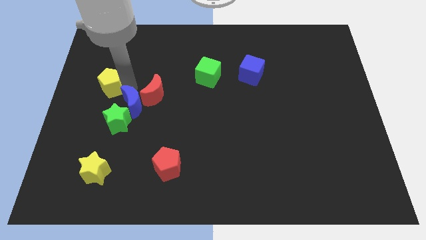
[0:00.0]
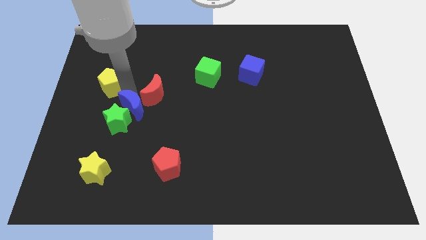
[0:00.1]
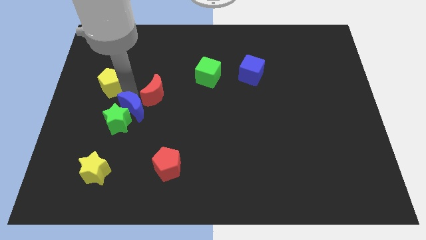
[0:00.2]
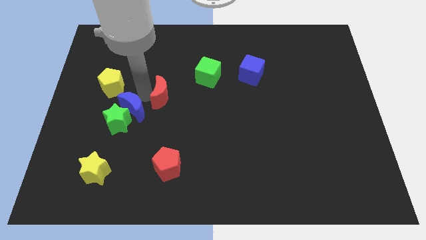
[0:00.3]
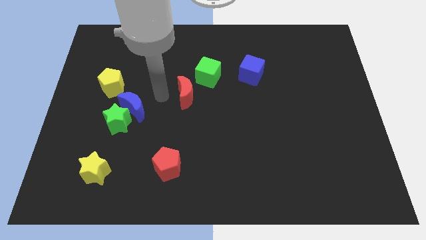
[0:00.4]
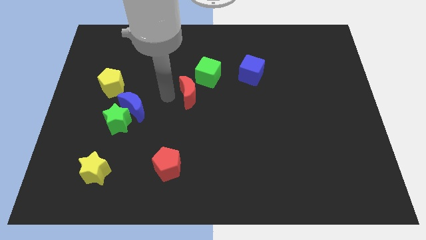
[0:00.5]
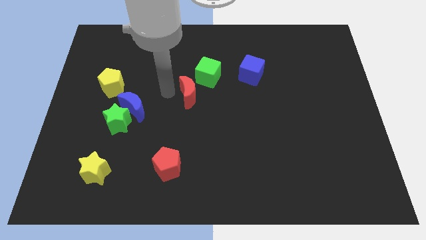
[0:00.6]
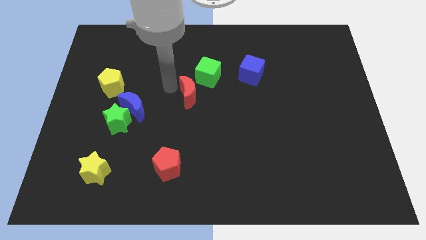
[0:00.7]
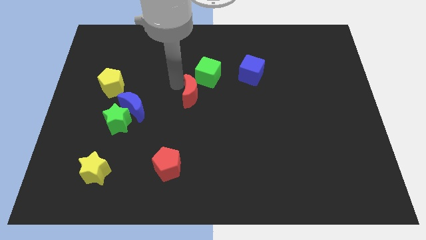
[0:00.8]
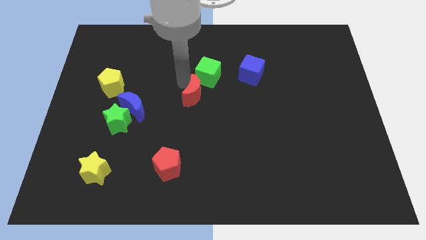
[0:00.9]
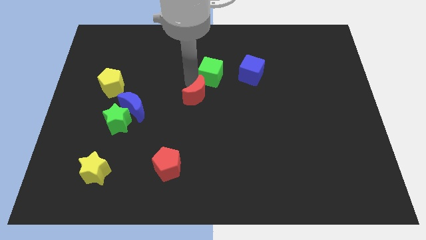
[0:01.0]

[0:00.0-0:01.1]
move the red moon away from the blue moon

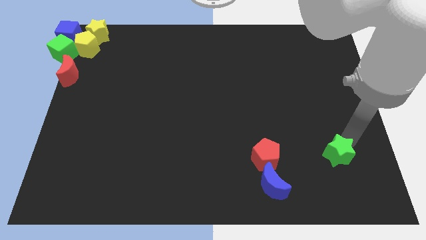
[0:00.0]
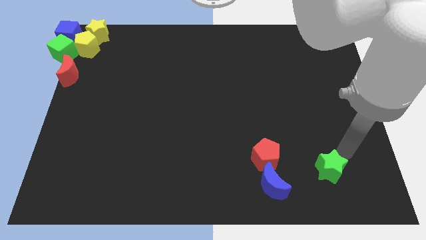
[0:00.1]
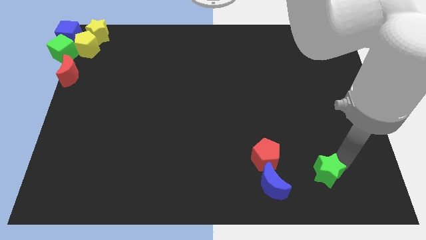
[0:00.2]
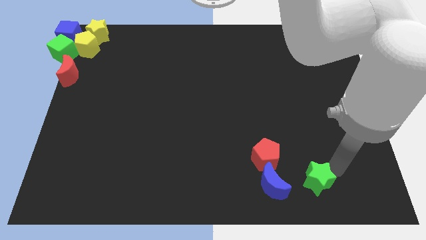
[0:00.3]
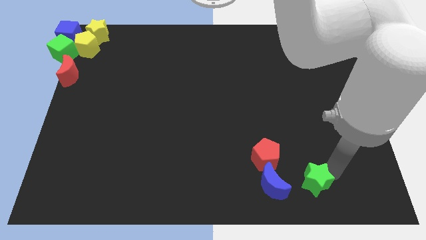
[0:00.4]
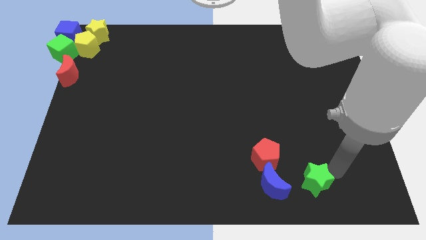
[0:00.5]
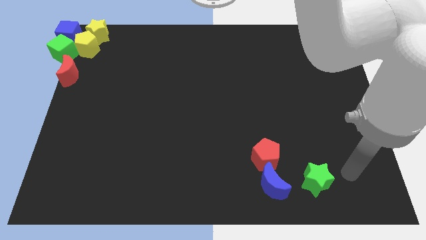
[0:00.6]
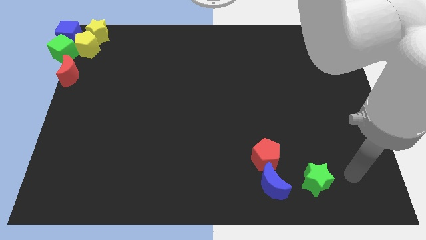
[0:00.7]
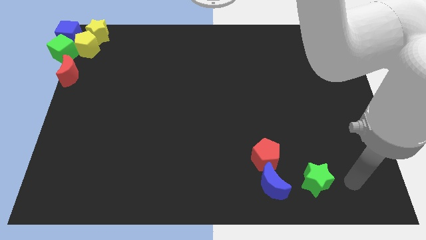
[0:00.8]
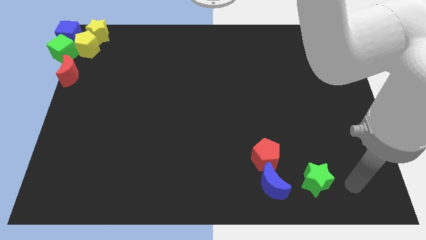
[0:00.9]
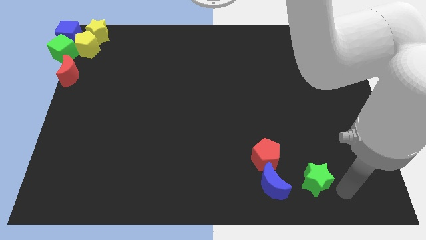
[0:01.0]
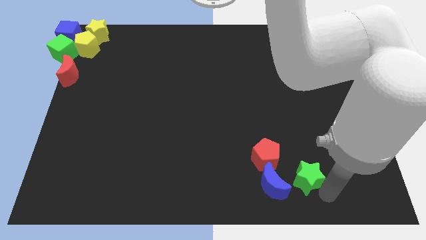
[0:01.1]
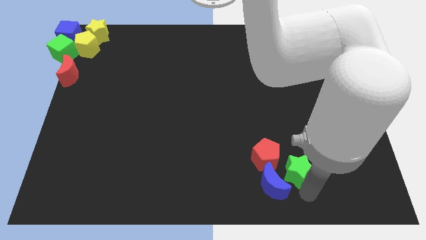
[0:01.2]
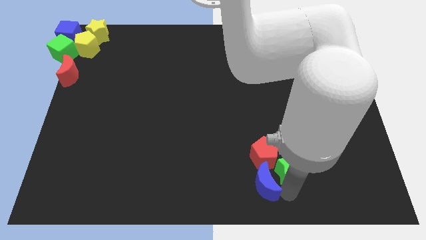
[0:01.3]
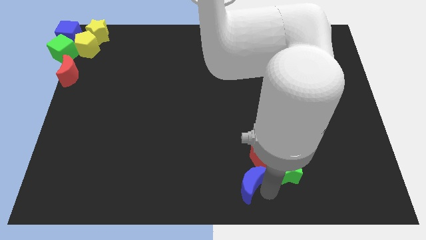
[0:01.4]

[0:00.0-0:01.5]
slide the green star into the red pentagon

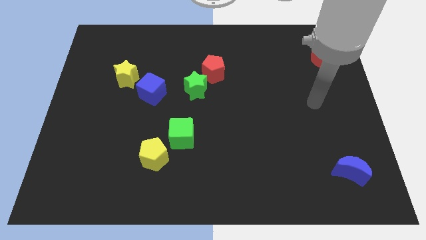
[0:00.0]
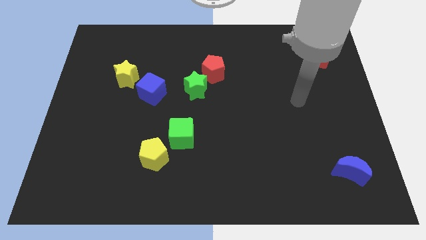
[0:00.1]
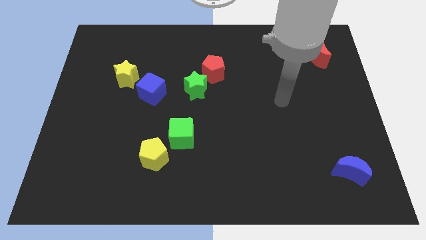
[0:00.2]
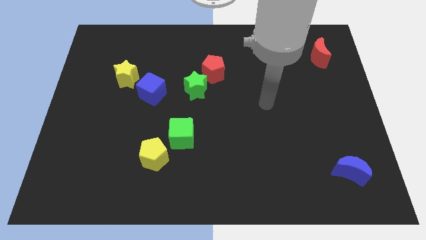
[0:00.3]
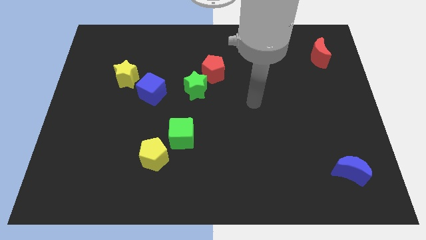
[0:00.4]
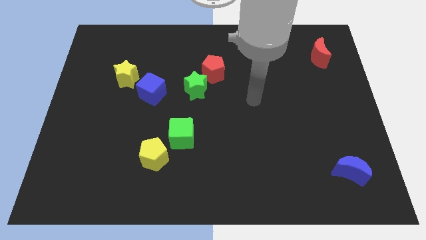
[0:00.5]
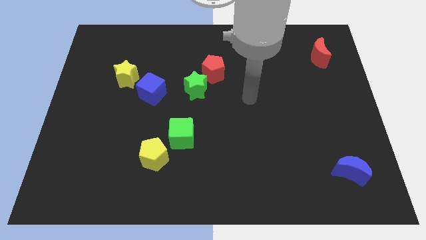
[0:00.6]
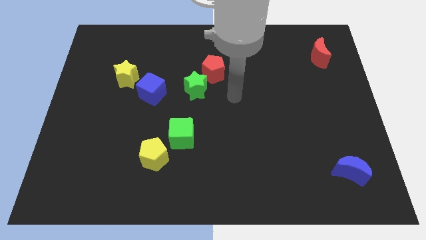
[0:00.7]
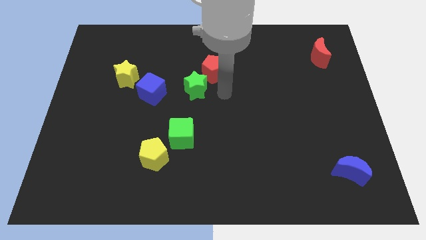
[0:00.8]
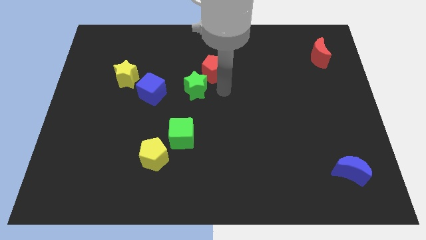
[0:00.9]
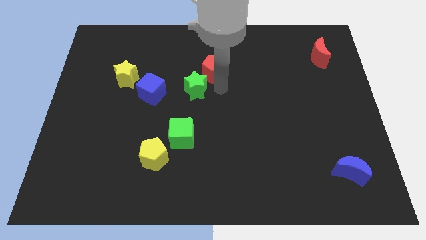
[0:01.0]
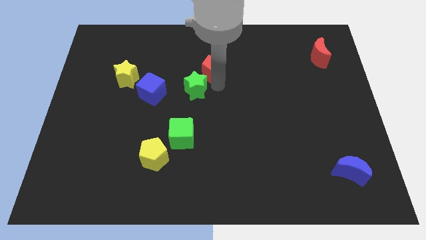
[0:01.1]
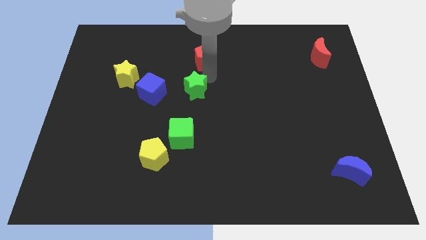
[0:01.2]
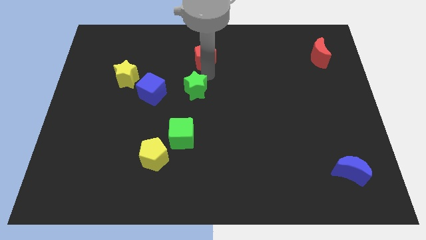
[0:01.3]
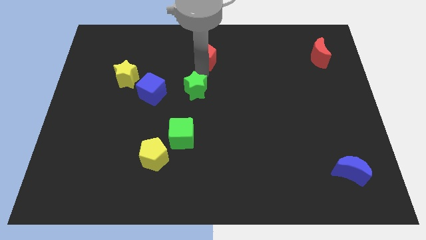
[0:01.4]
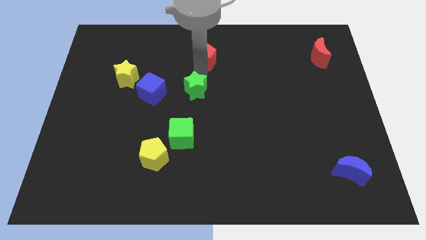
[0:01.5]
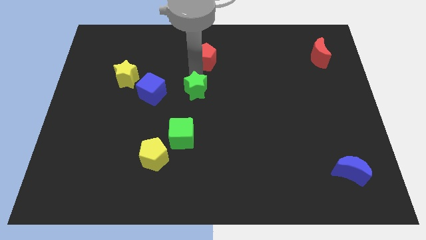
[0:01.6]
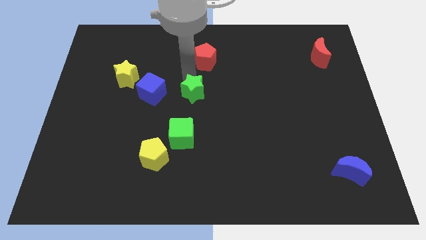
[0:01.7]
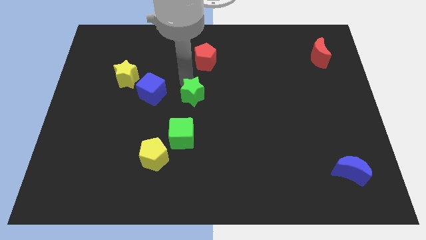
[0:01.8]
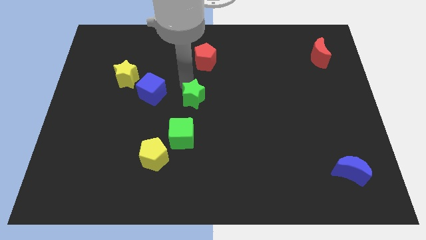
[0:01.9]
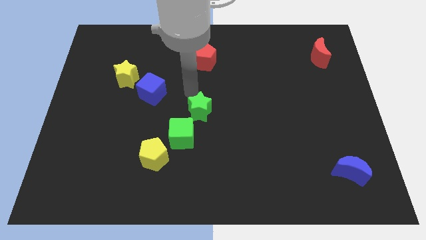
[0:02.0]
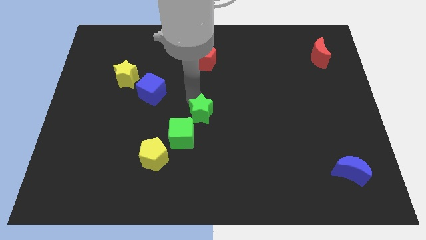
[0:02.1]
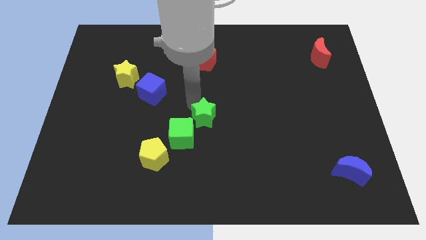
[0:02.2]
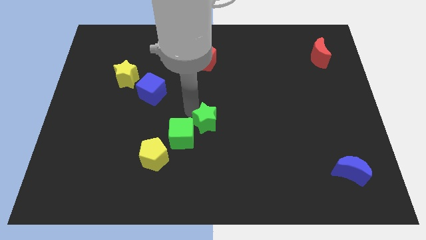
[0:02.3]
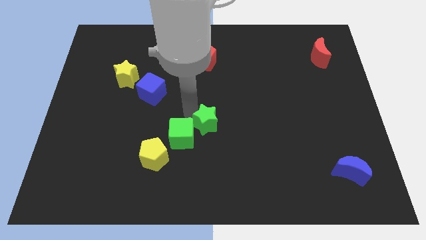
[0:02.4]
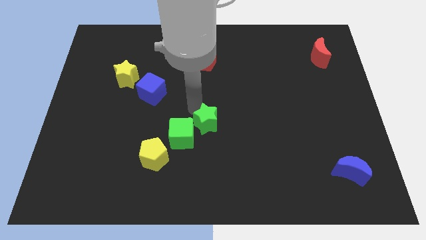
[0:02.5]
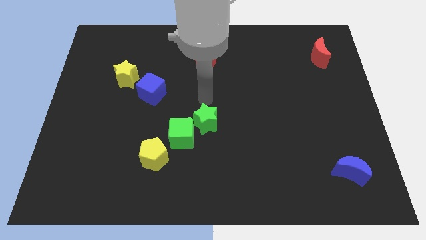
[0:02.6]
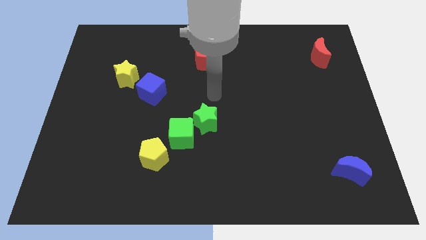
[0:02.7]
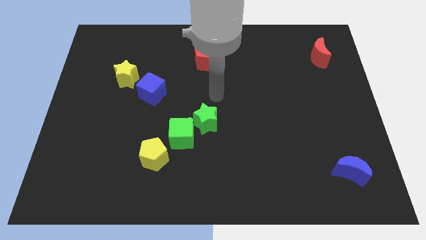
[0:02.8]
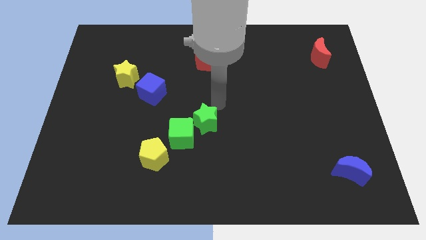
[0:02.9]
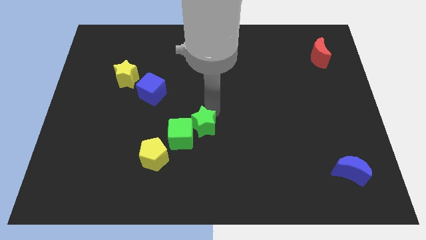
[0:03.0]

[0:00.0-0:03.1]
separate the green star from the red pentagon

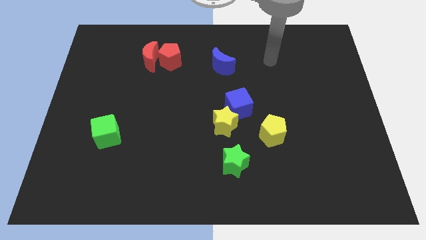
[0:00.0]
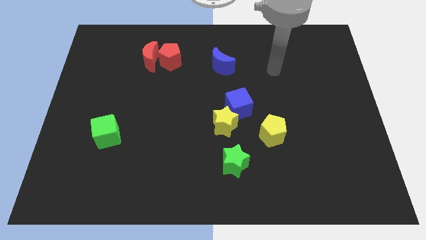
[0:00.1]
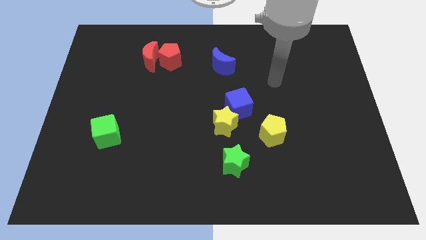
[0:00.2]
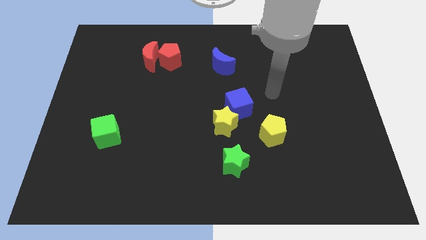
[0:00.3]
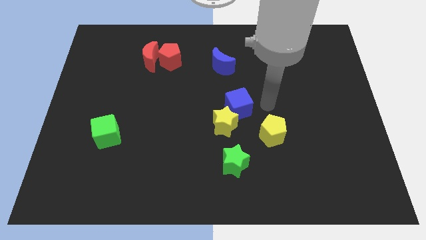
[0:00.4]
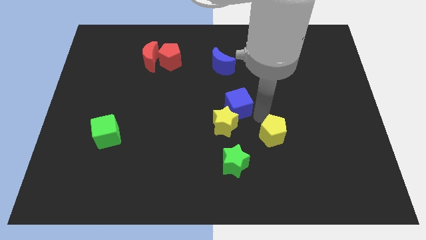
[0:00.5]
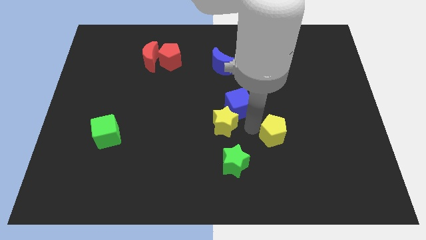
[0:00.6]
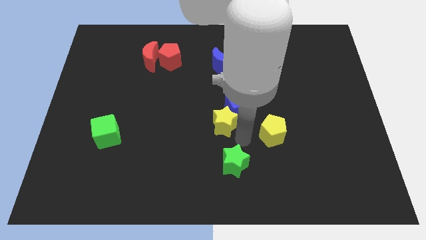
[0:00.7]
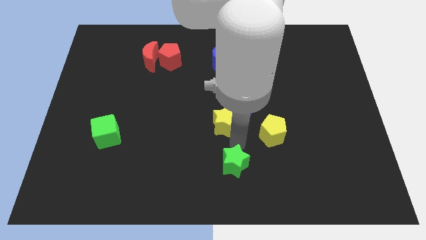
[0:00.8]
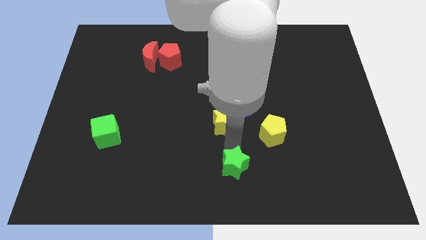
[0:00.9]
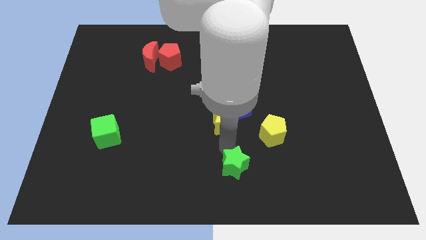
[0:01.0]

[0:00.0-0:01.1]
touch the green star at the top

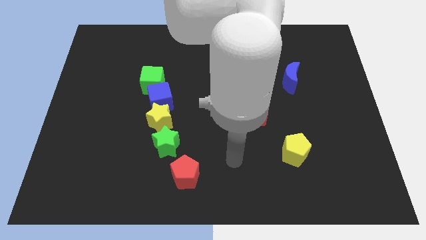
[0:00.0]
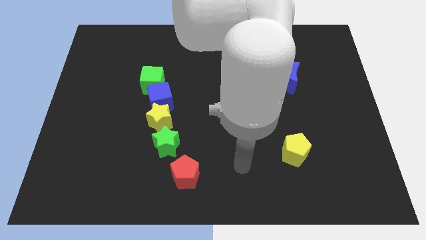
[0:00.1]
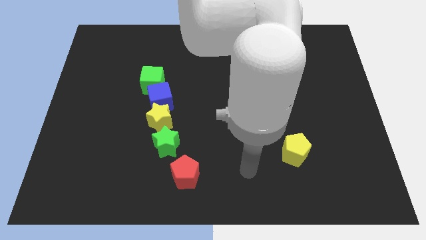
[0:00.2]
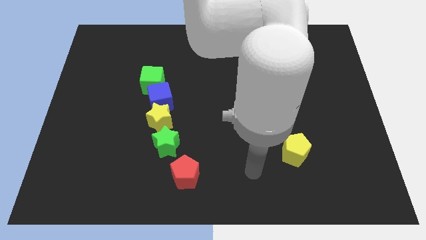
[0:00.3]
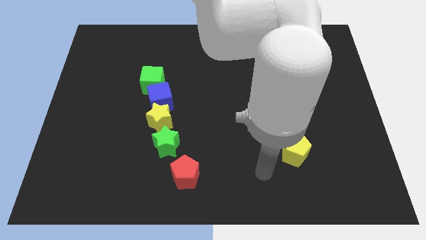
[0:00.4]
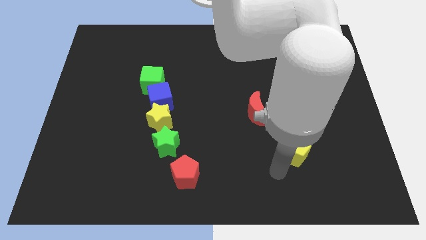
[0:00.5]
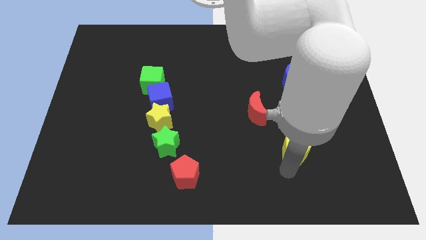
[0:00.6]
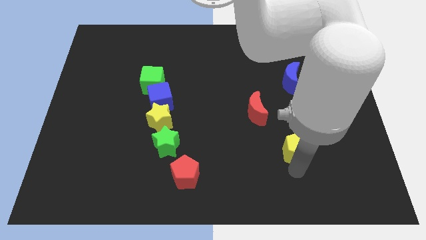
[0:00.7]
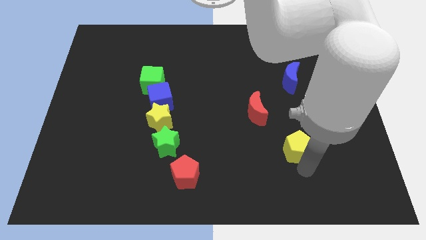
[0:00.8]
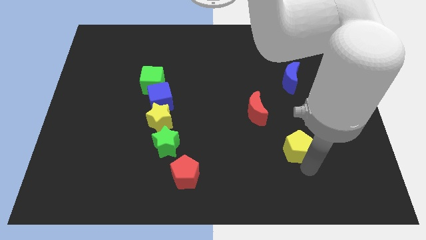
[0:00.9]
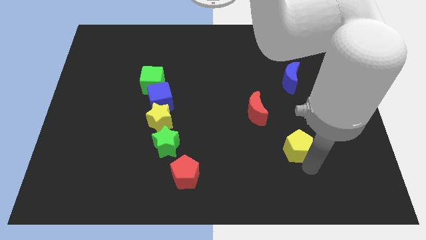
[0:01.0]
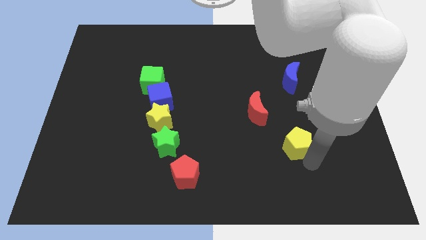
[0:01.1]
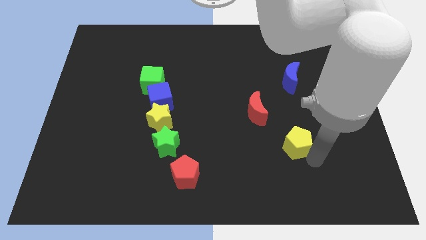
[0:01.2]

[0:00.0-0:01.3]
move the yellow pentagon slightly up

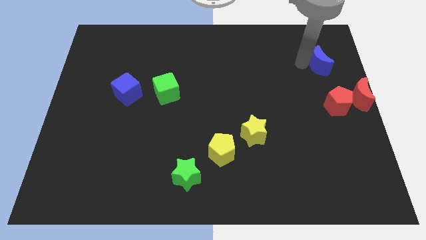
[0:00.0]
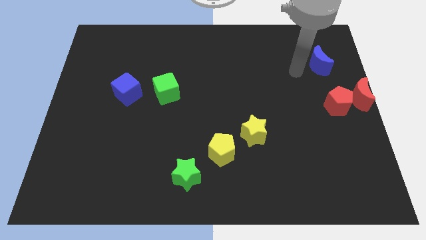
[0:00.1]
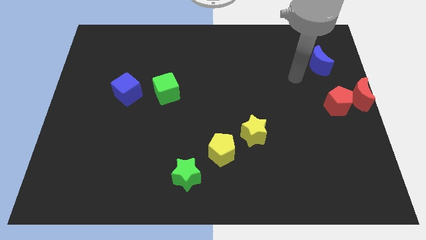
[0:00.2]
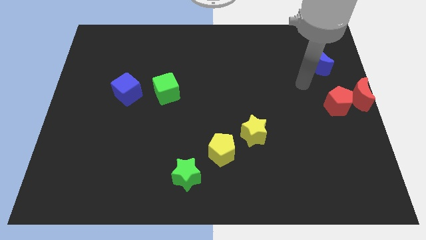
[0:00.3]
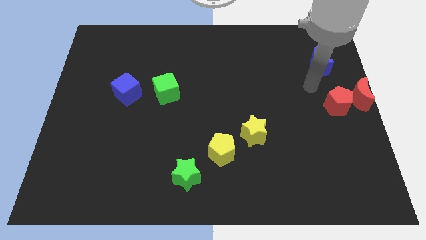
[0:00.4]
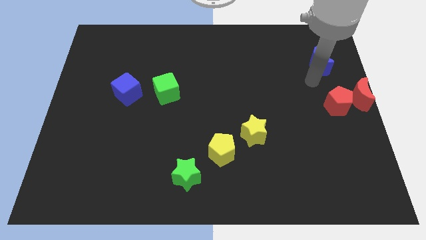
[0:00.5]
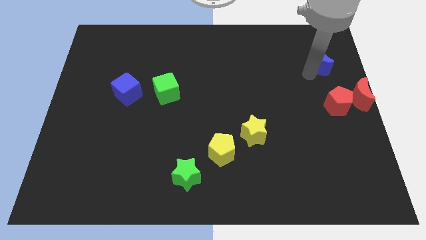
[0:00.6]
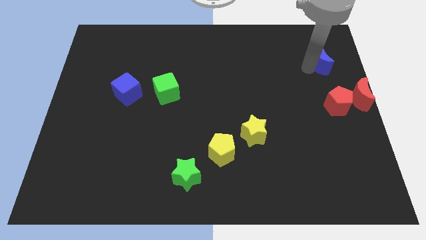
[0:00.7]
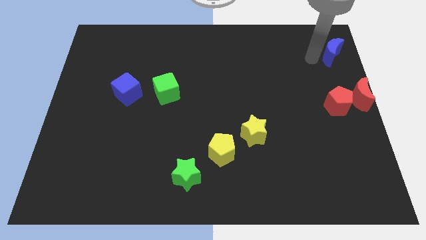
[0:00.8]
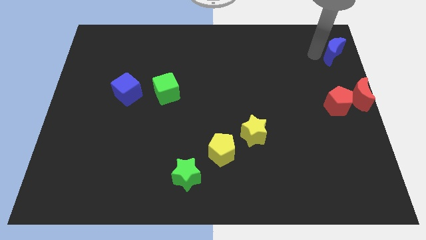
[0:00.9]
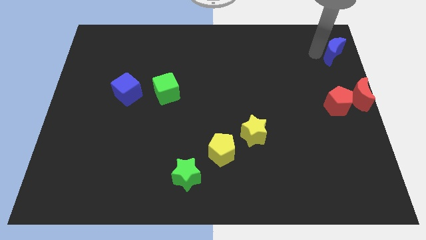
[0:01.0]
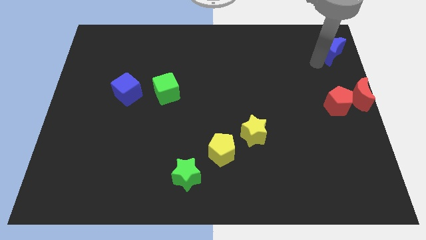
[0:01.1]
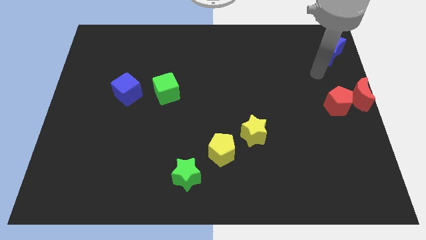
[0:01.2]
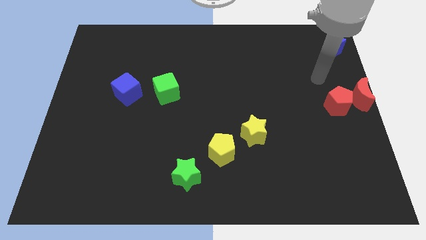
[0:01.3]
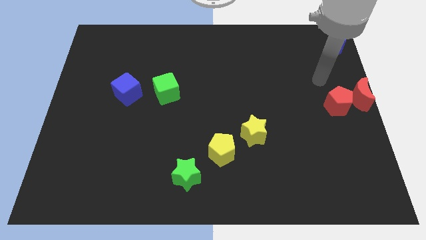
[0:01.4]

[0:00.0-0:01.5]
place the blue crescent above the red moon
